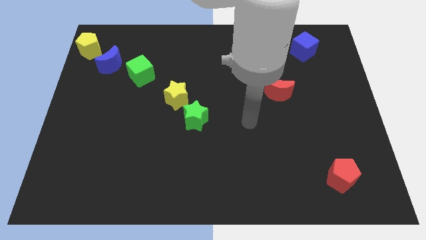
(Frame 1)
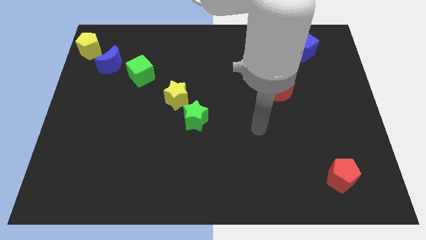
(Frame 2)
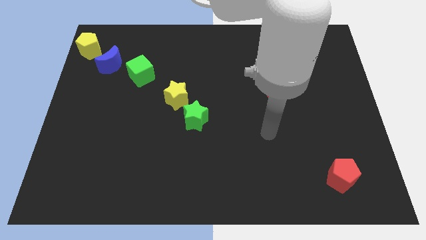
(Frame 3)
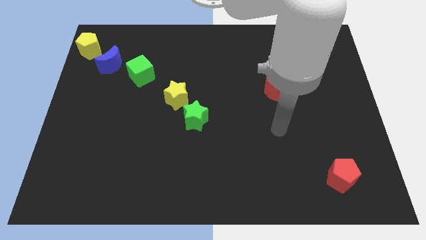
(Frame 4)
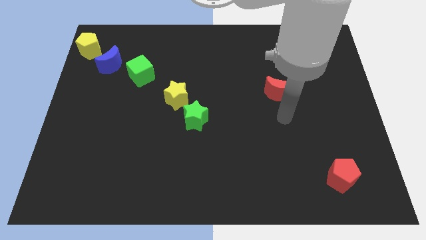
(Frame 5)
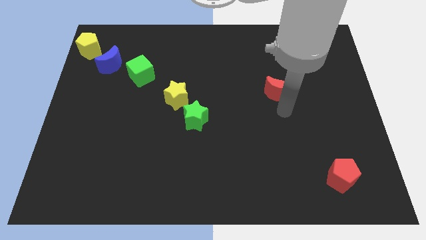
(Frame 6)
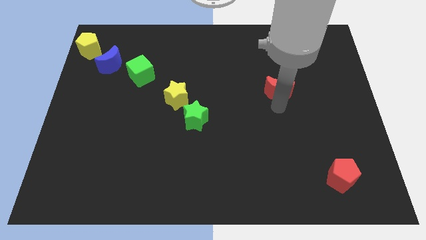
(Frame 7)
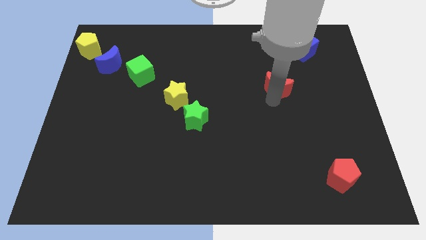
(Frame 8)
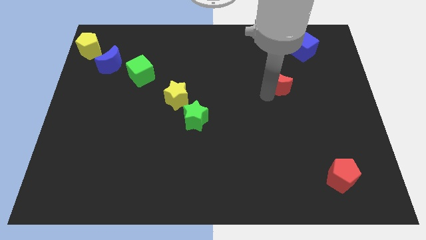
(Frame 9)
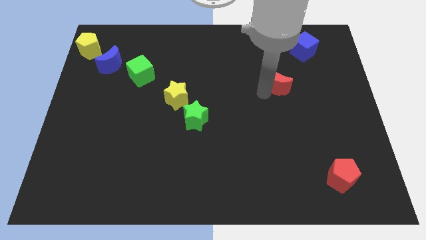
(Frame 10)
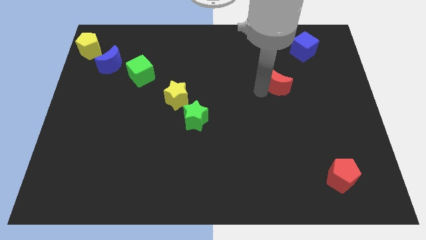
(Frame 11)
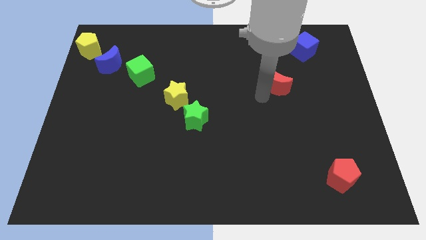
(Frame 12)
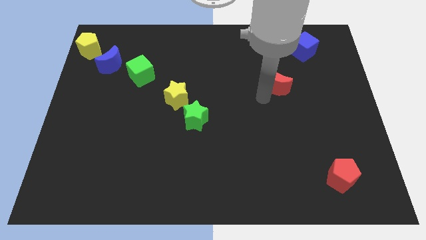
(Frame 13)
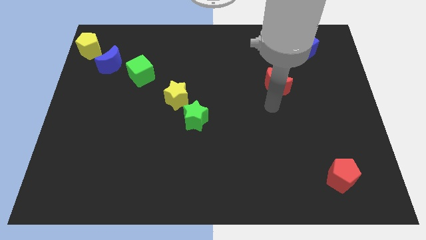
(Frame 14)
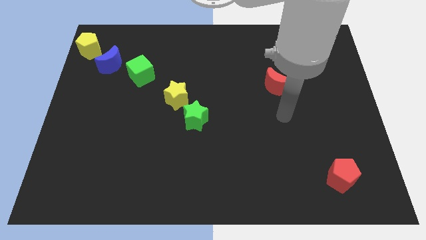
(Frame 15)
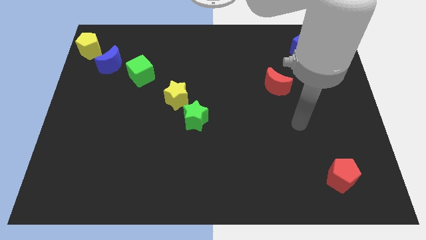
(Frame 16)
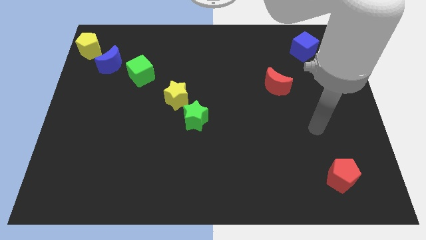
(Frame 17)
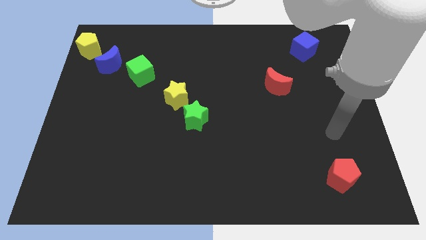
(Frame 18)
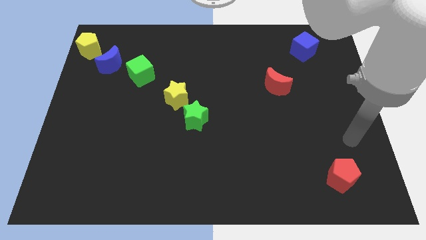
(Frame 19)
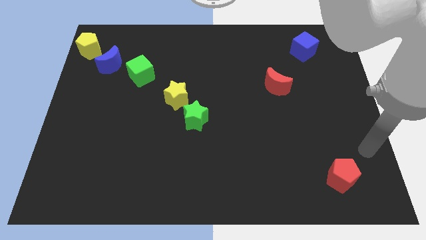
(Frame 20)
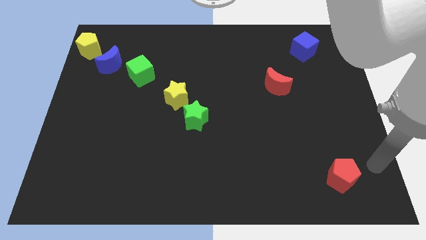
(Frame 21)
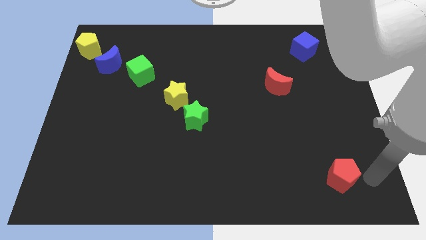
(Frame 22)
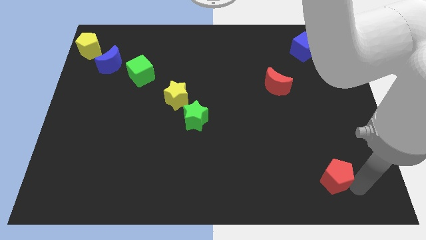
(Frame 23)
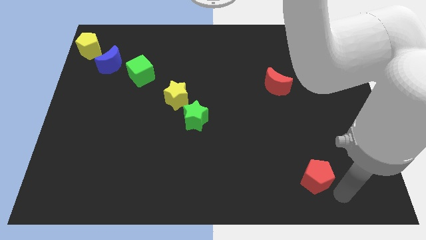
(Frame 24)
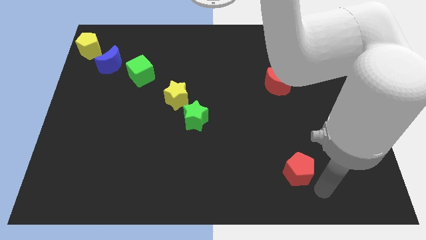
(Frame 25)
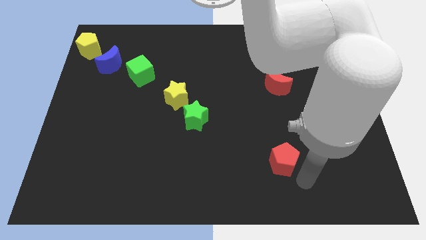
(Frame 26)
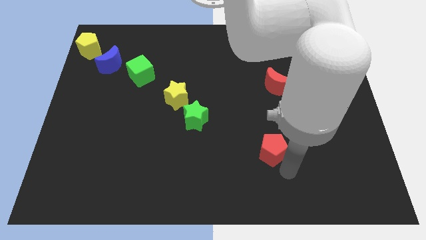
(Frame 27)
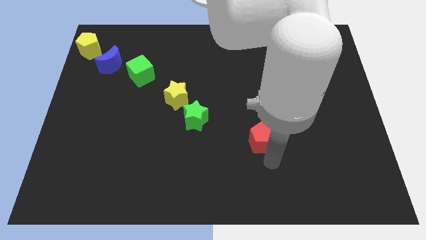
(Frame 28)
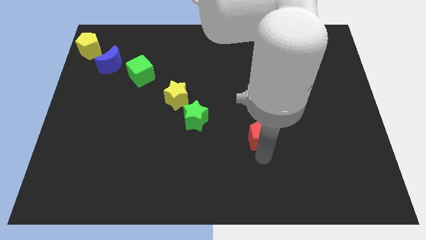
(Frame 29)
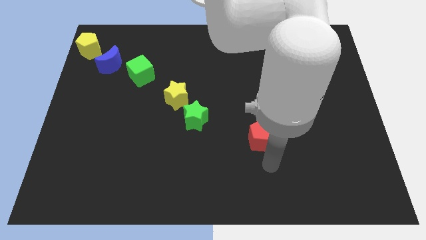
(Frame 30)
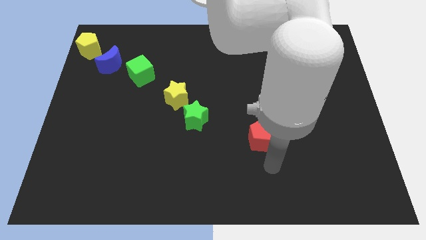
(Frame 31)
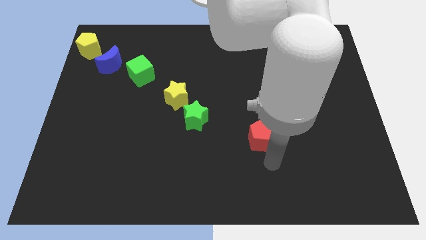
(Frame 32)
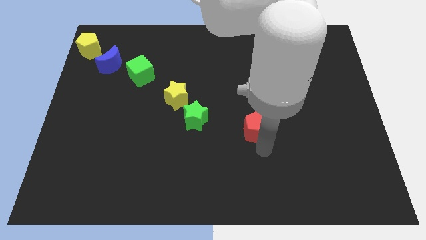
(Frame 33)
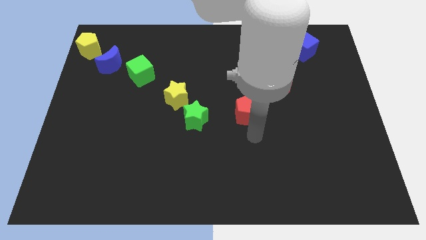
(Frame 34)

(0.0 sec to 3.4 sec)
place the red pentagon right to the green star

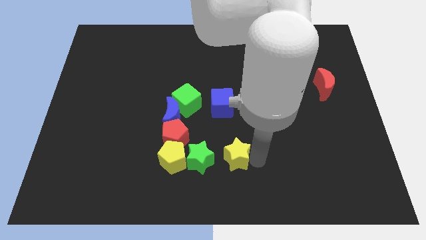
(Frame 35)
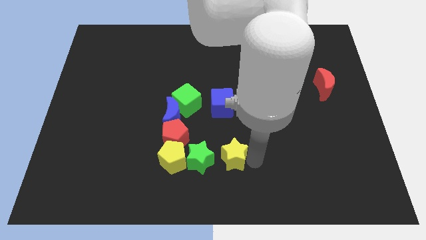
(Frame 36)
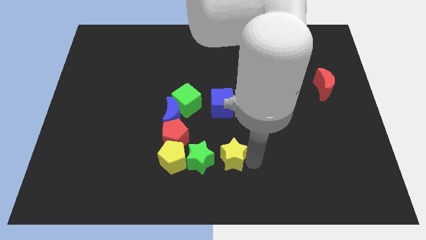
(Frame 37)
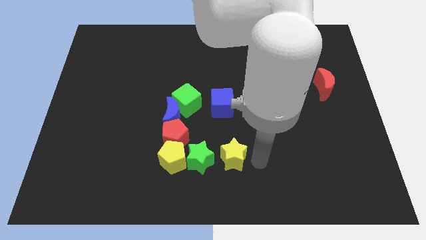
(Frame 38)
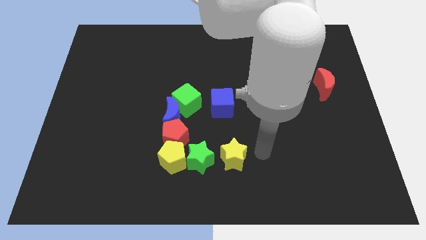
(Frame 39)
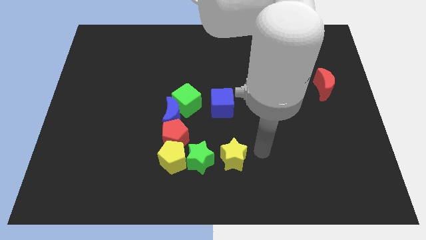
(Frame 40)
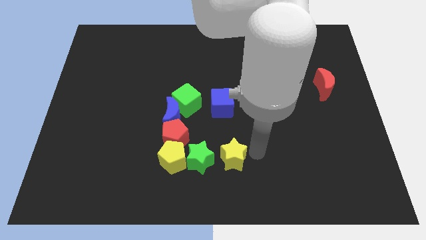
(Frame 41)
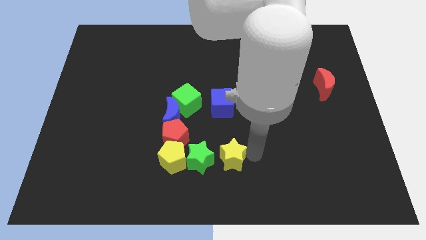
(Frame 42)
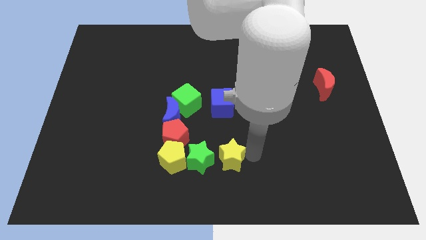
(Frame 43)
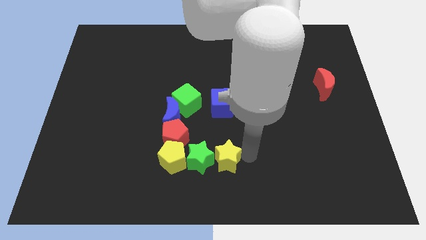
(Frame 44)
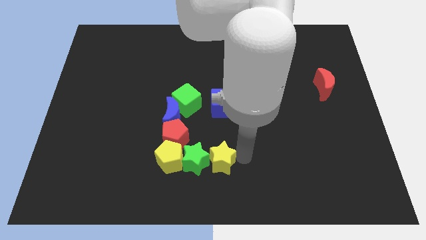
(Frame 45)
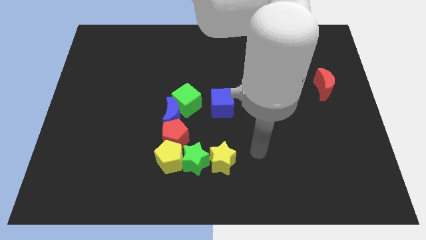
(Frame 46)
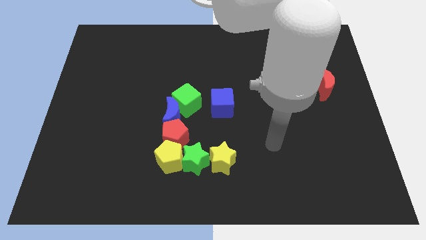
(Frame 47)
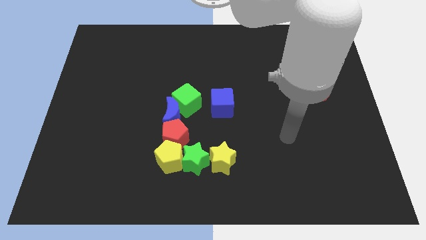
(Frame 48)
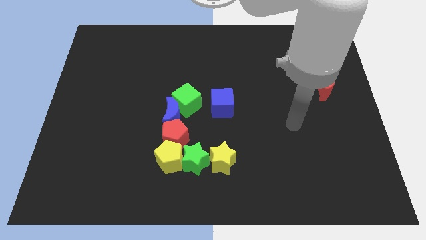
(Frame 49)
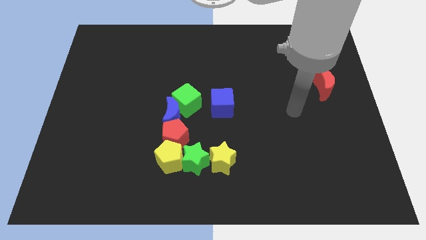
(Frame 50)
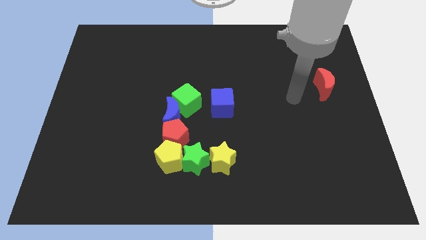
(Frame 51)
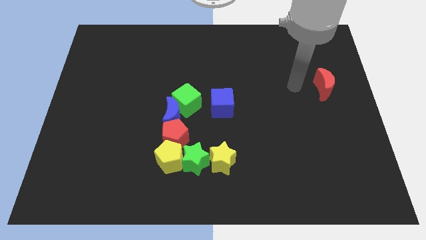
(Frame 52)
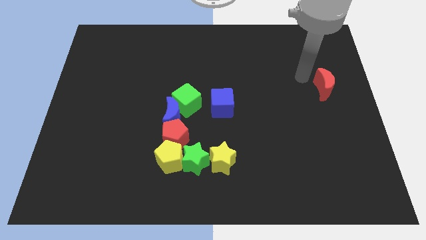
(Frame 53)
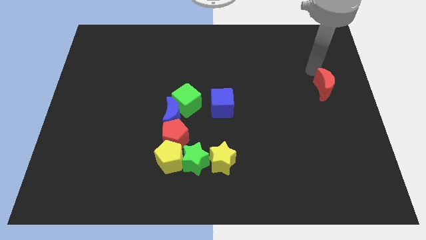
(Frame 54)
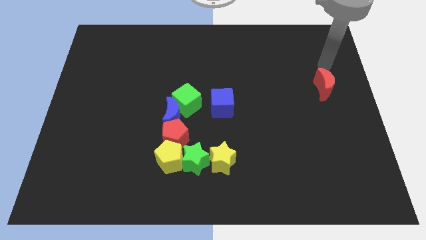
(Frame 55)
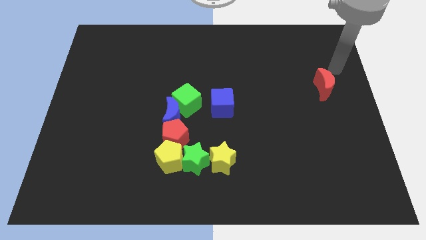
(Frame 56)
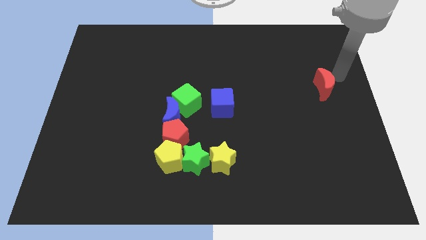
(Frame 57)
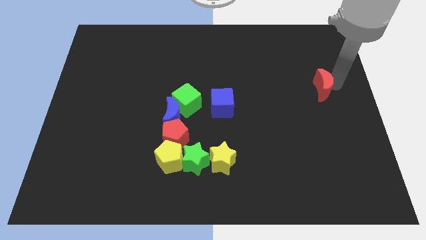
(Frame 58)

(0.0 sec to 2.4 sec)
move your arm away form the yellow star

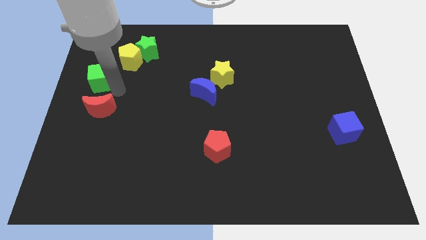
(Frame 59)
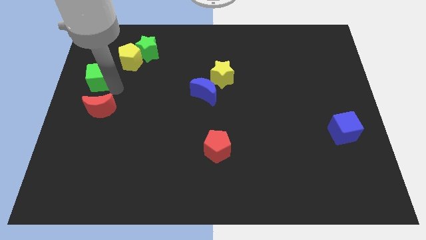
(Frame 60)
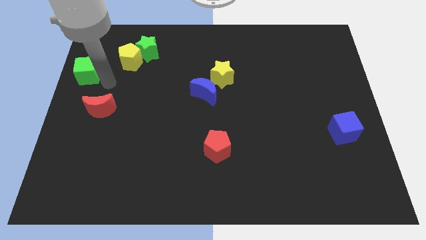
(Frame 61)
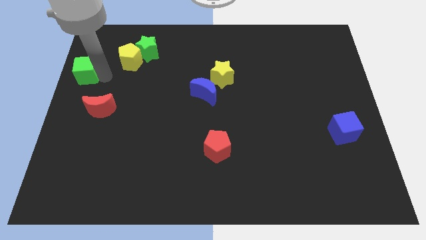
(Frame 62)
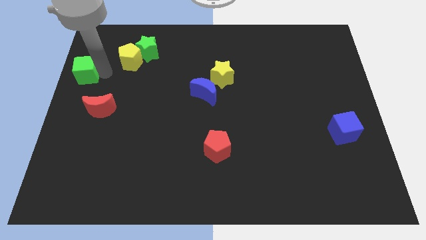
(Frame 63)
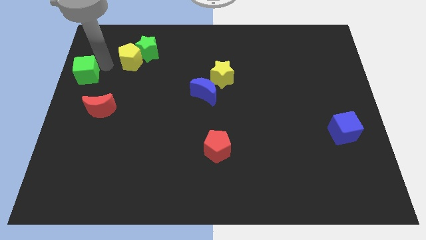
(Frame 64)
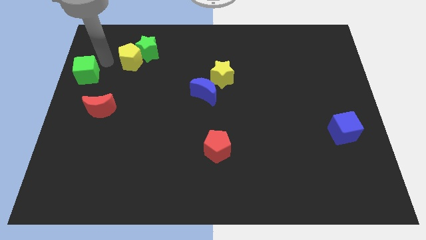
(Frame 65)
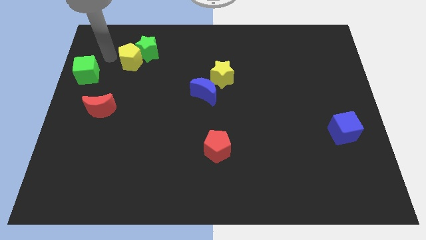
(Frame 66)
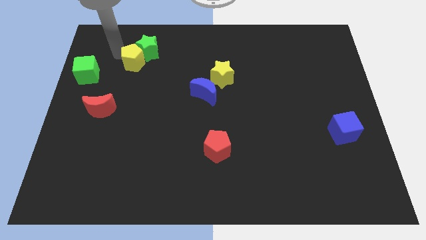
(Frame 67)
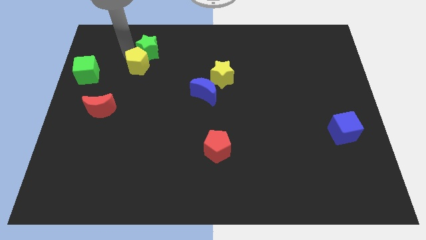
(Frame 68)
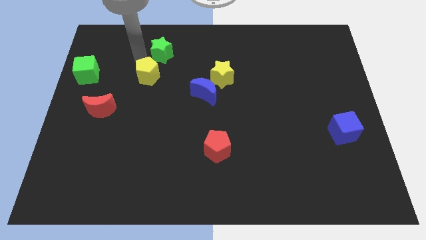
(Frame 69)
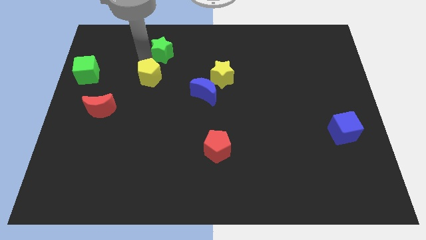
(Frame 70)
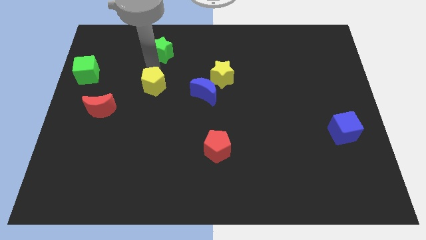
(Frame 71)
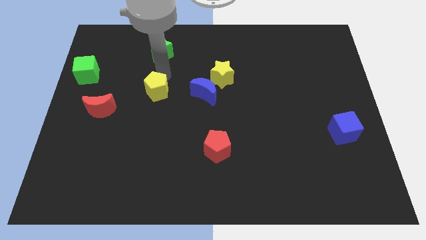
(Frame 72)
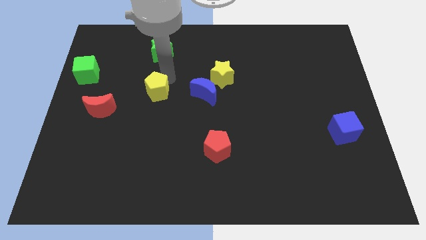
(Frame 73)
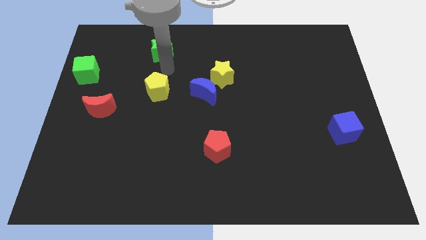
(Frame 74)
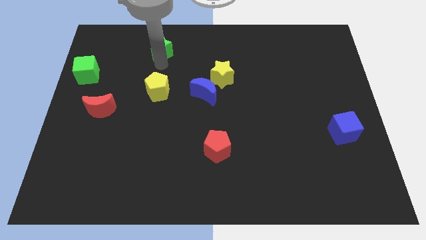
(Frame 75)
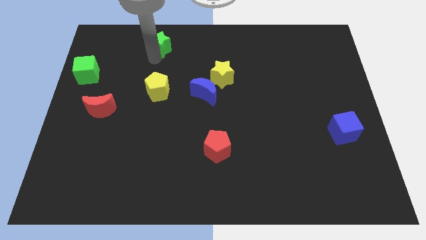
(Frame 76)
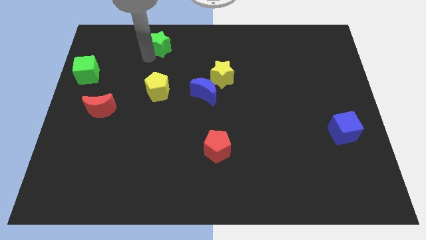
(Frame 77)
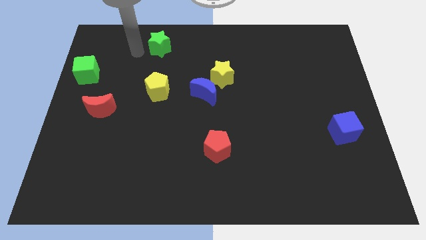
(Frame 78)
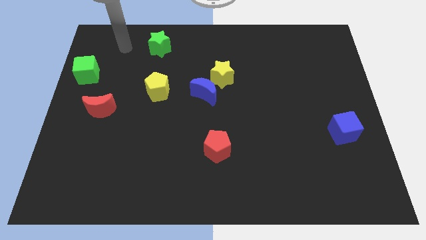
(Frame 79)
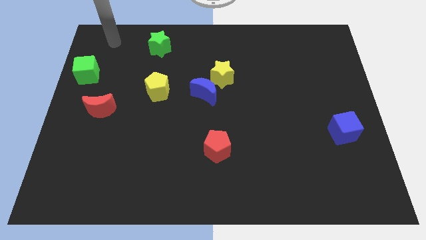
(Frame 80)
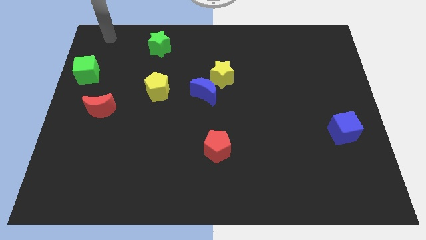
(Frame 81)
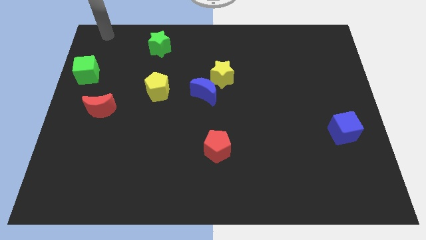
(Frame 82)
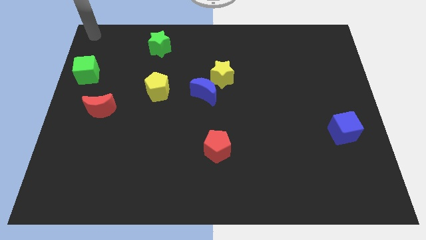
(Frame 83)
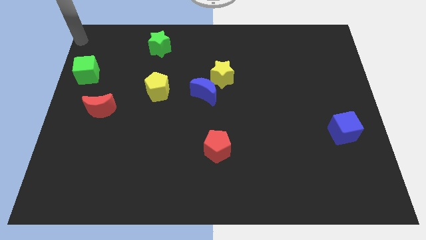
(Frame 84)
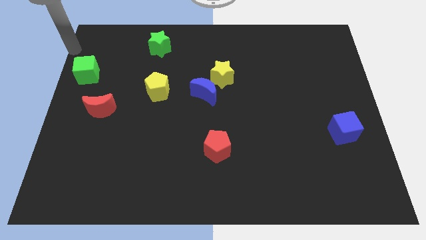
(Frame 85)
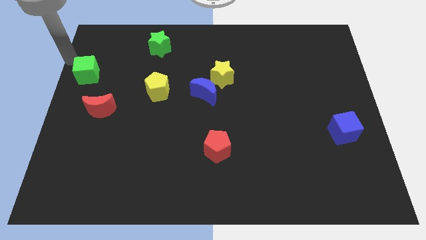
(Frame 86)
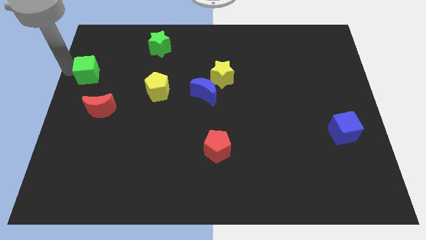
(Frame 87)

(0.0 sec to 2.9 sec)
separate the yellow pentagon from the green star
